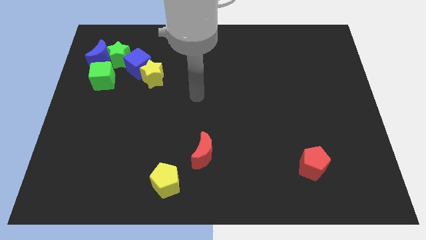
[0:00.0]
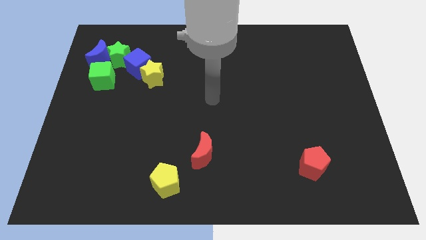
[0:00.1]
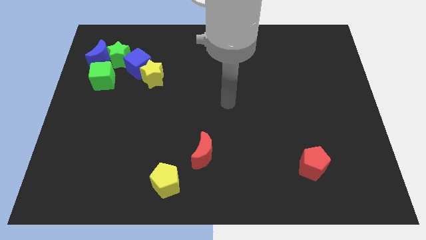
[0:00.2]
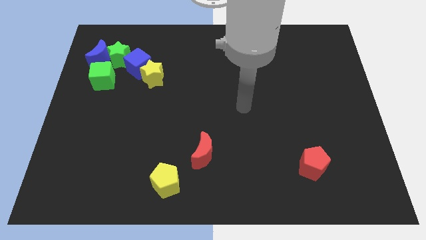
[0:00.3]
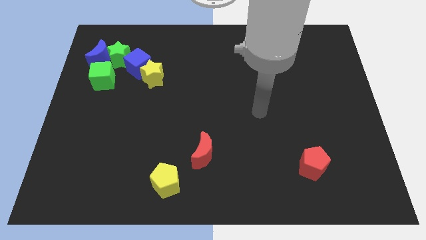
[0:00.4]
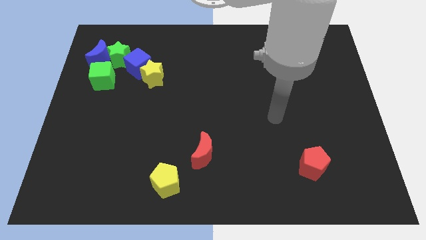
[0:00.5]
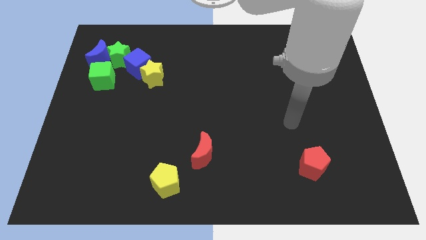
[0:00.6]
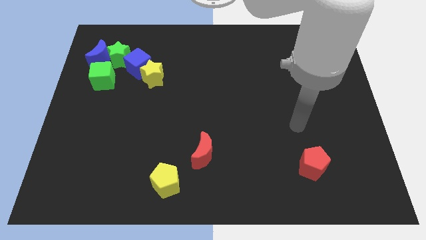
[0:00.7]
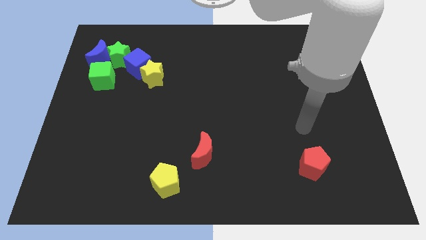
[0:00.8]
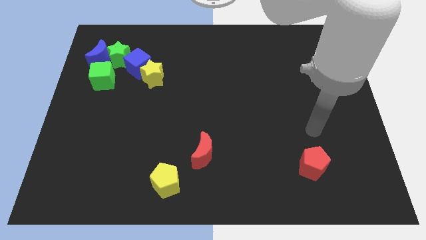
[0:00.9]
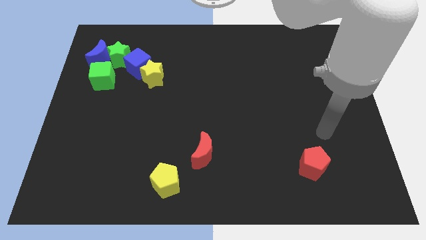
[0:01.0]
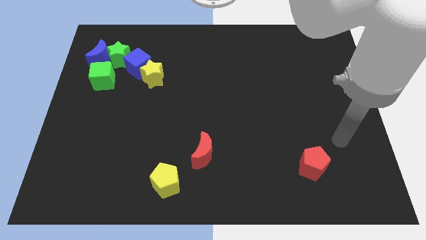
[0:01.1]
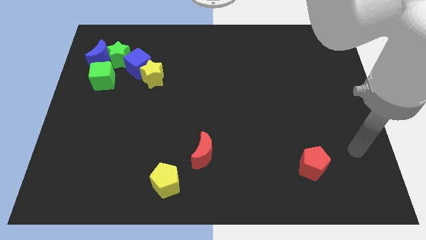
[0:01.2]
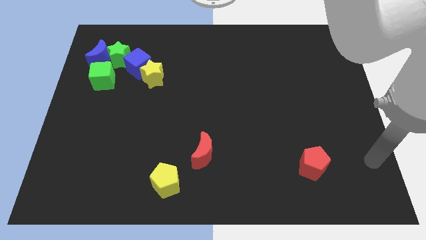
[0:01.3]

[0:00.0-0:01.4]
move the arm diagonally down

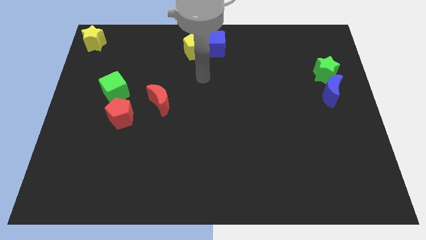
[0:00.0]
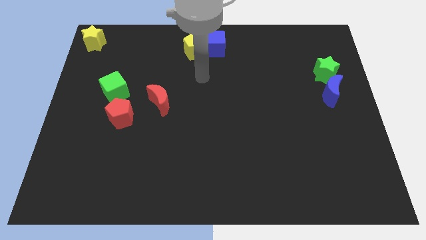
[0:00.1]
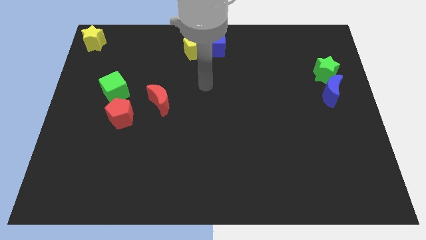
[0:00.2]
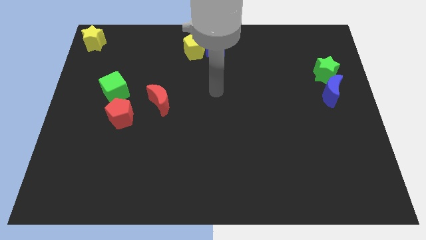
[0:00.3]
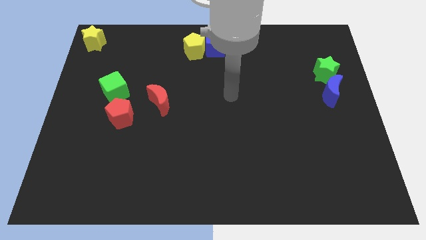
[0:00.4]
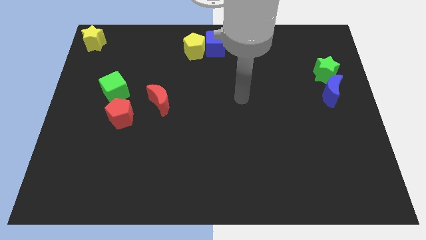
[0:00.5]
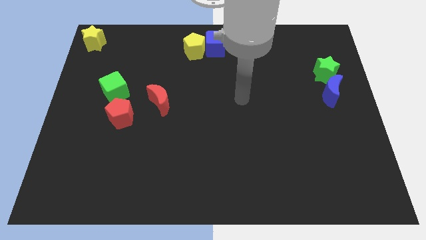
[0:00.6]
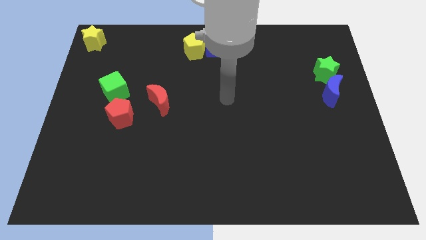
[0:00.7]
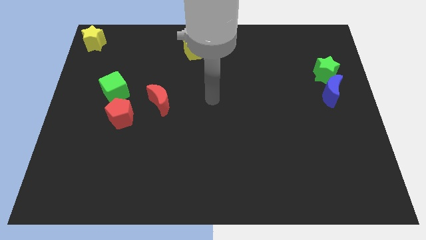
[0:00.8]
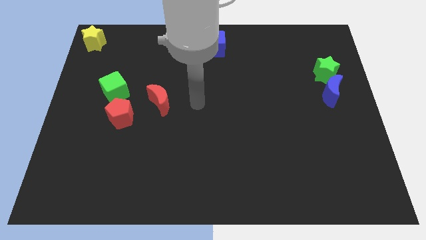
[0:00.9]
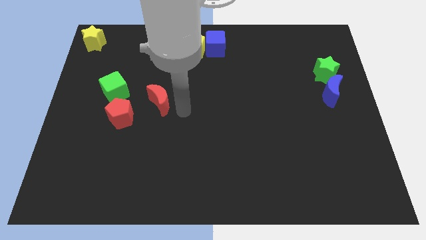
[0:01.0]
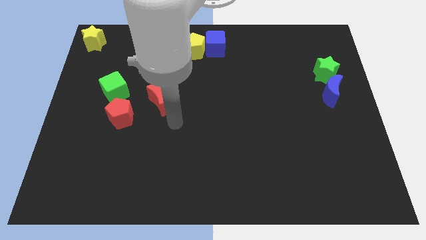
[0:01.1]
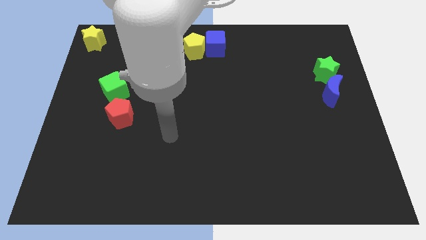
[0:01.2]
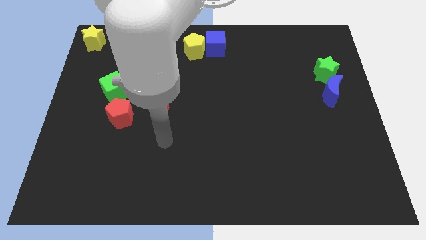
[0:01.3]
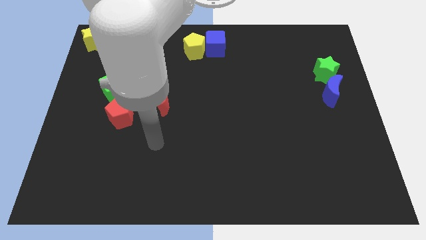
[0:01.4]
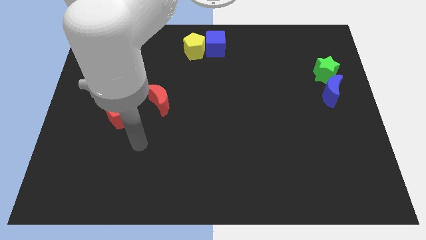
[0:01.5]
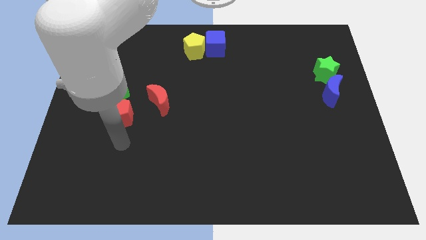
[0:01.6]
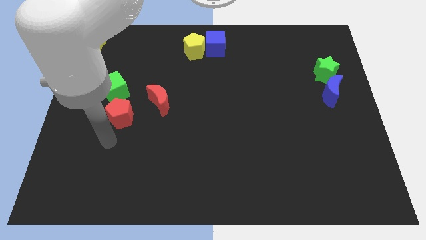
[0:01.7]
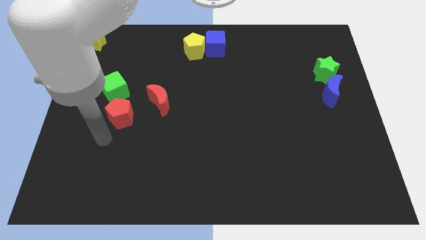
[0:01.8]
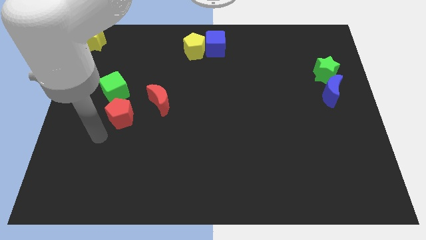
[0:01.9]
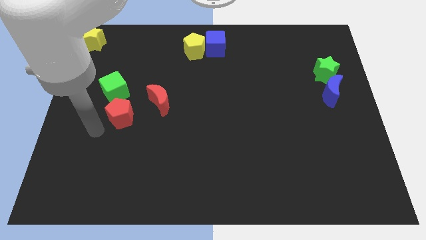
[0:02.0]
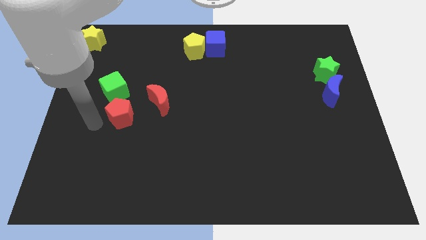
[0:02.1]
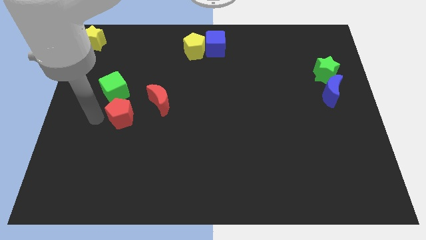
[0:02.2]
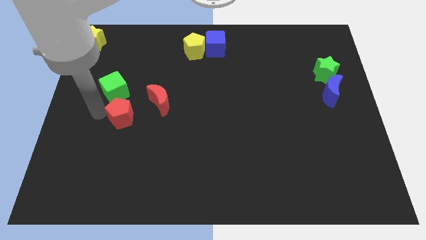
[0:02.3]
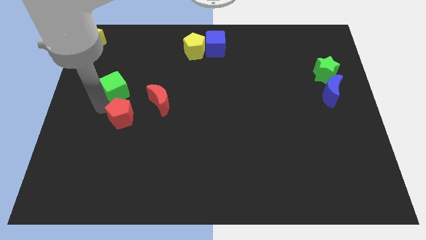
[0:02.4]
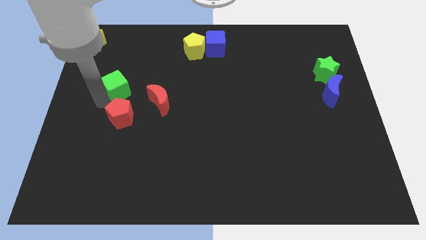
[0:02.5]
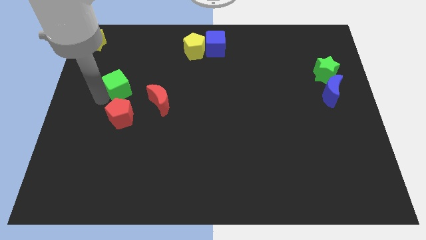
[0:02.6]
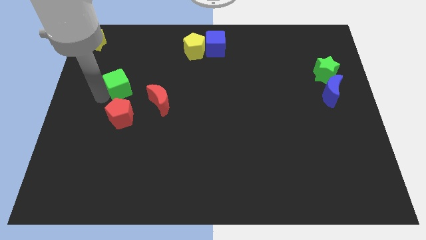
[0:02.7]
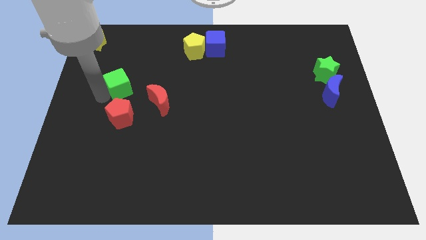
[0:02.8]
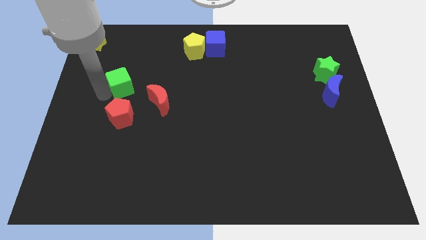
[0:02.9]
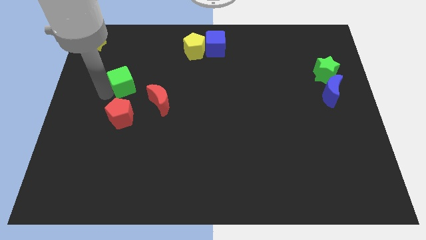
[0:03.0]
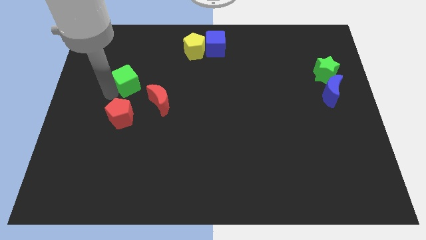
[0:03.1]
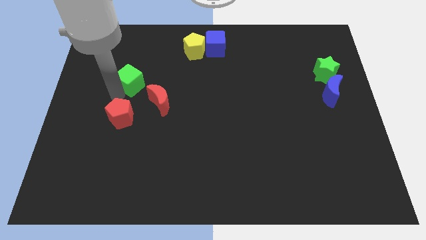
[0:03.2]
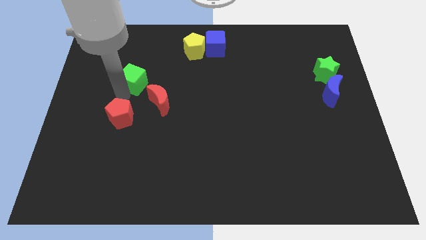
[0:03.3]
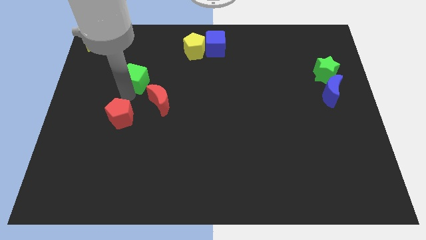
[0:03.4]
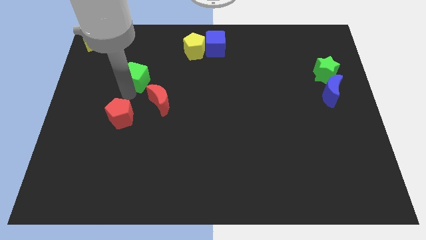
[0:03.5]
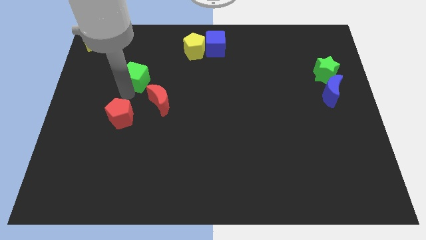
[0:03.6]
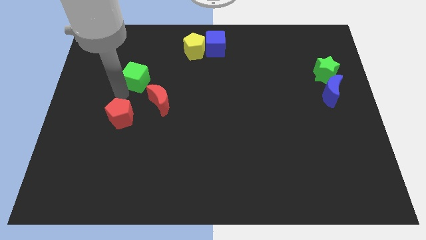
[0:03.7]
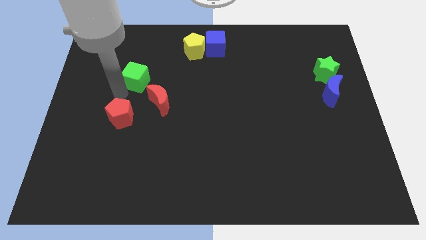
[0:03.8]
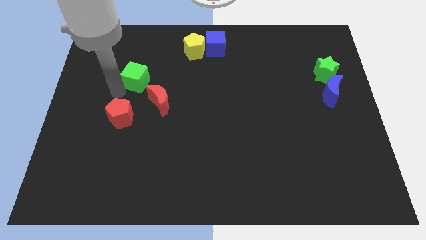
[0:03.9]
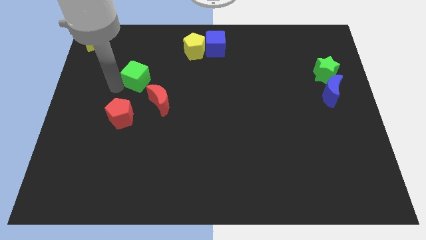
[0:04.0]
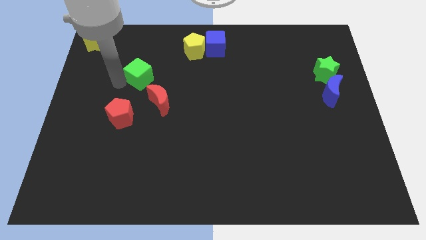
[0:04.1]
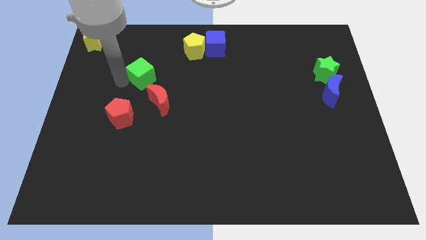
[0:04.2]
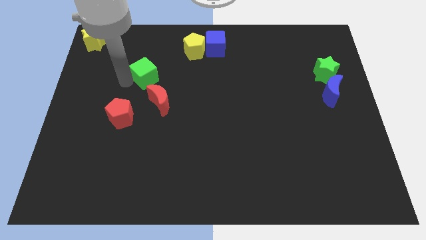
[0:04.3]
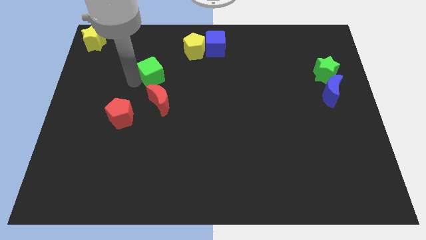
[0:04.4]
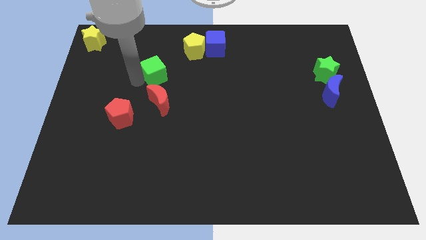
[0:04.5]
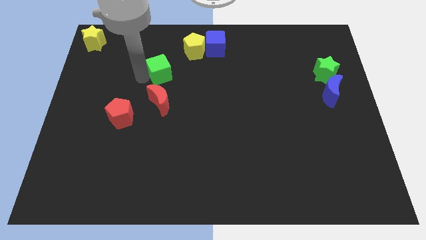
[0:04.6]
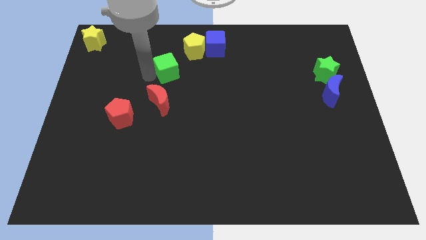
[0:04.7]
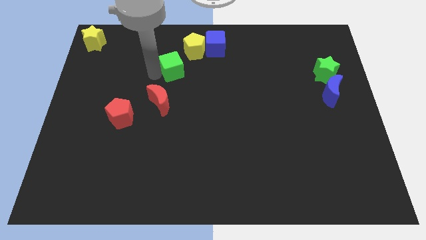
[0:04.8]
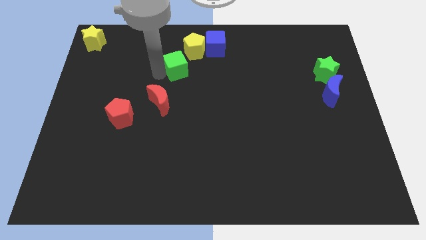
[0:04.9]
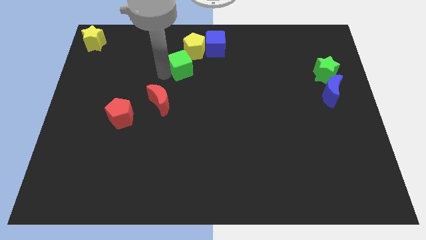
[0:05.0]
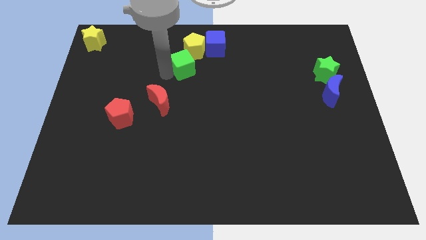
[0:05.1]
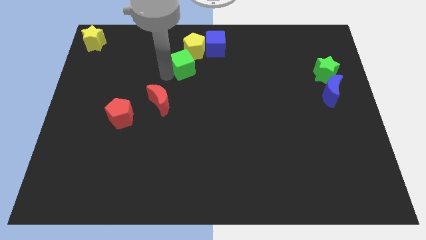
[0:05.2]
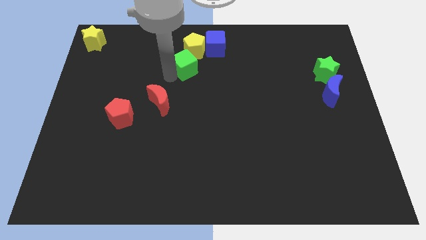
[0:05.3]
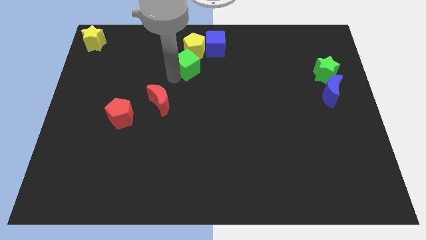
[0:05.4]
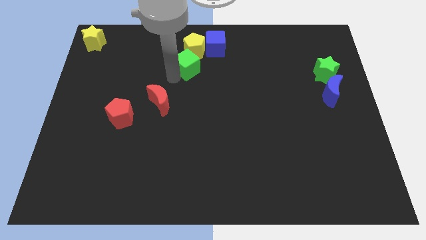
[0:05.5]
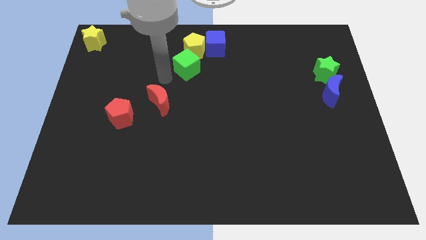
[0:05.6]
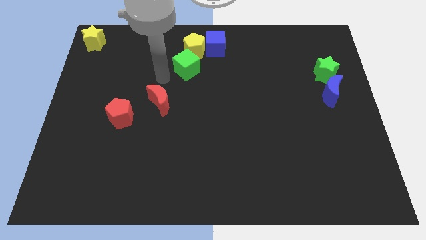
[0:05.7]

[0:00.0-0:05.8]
move blue cube below yellow pentagon

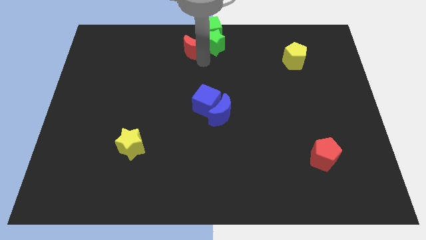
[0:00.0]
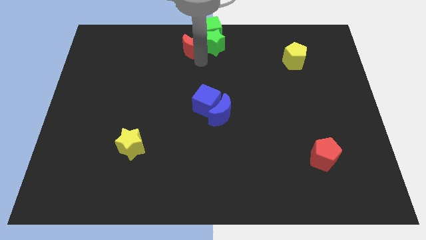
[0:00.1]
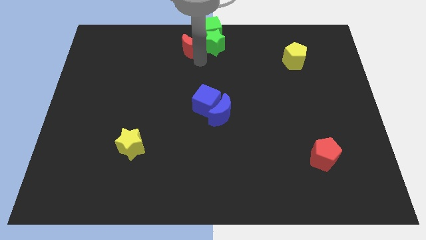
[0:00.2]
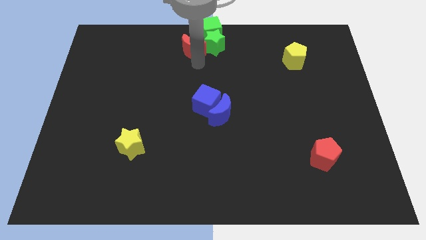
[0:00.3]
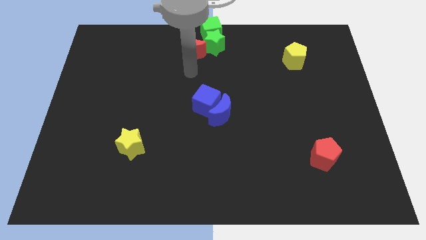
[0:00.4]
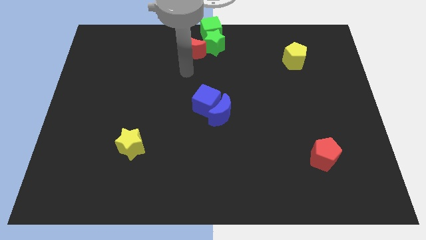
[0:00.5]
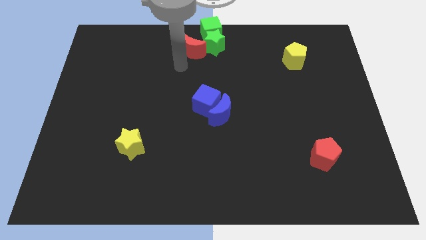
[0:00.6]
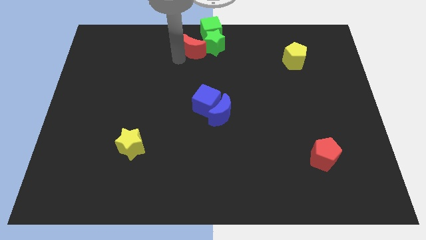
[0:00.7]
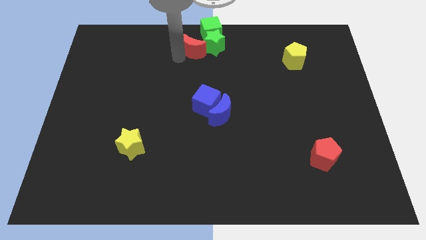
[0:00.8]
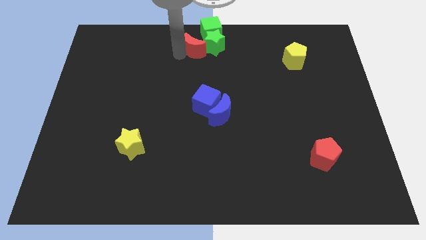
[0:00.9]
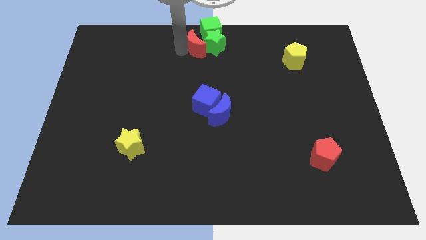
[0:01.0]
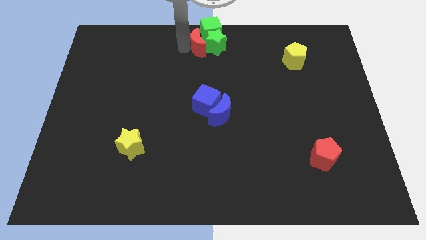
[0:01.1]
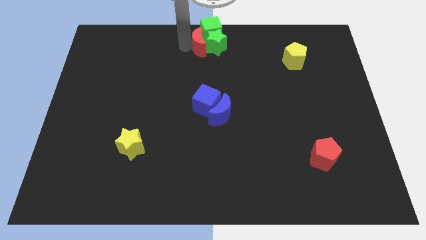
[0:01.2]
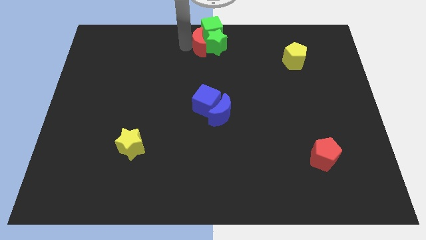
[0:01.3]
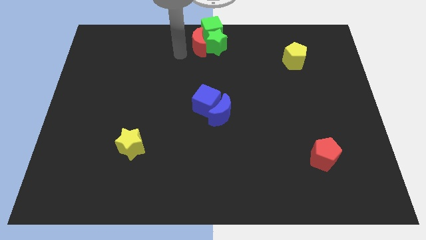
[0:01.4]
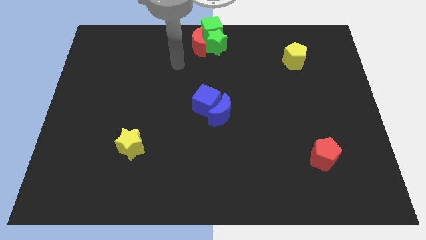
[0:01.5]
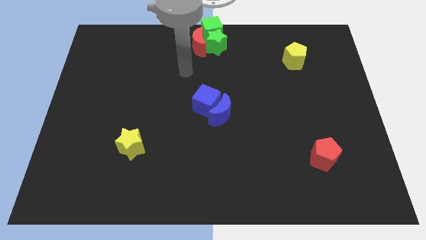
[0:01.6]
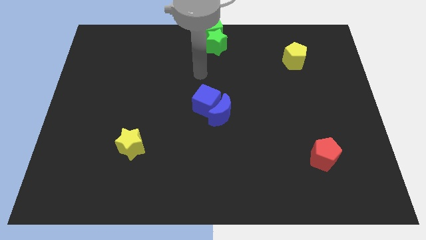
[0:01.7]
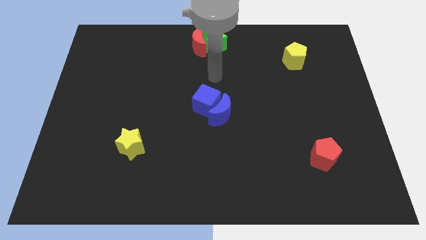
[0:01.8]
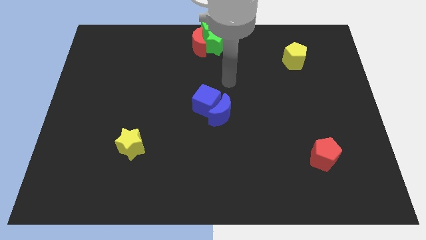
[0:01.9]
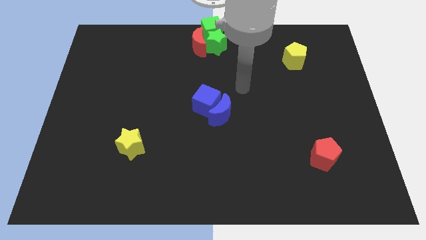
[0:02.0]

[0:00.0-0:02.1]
adjust the red moon to the bottom left of green cube
